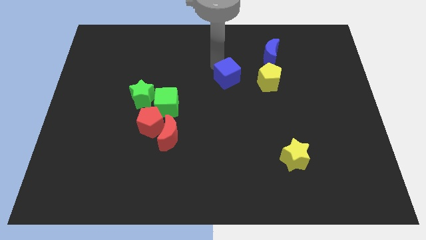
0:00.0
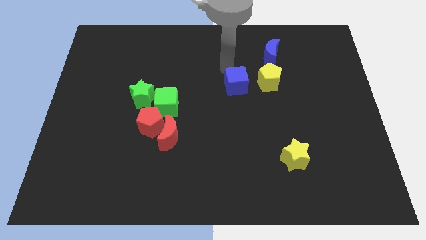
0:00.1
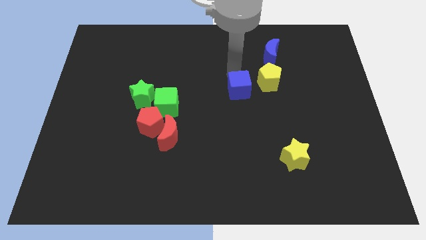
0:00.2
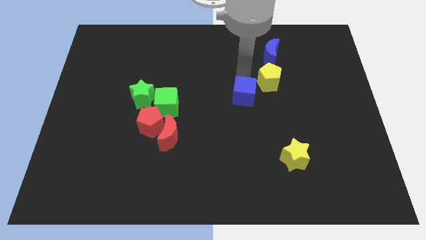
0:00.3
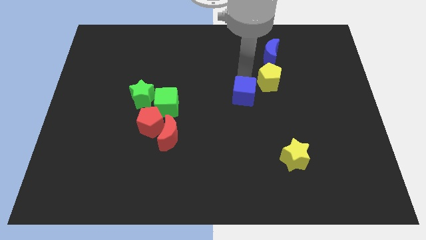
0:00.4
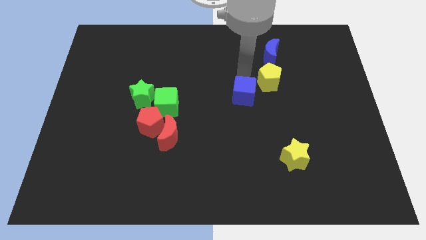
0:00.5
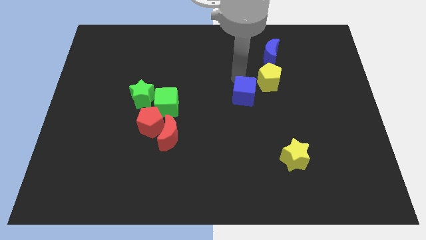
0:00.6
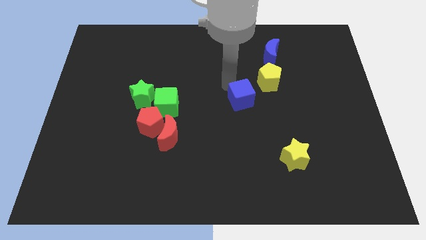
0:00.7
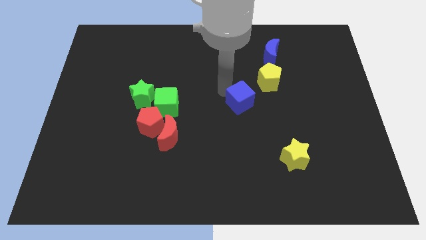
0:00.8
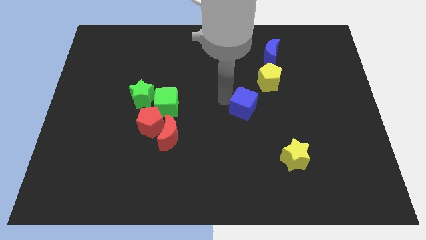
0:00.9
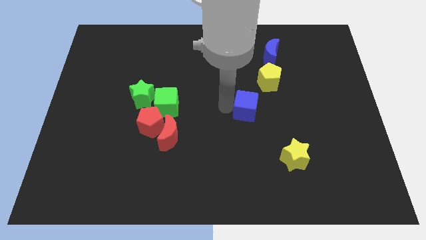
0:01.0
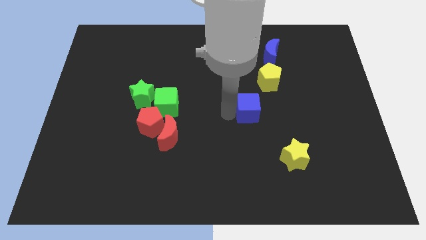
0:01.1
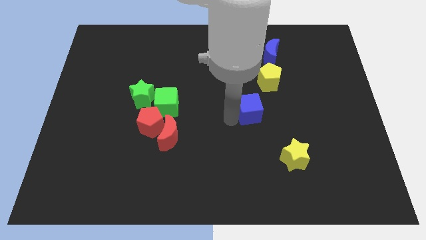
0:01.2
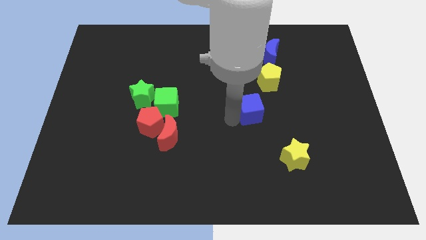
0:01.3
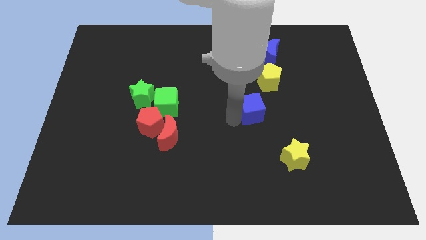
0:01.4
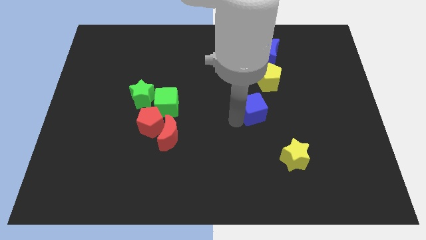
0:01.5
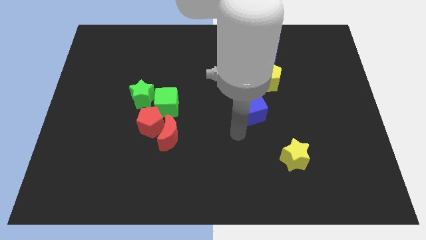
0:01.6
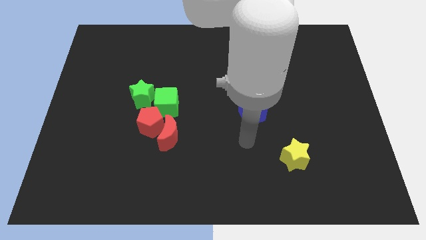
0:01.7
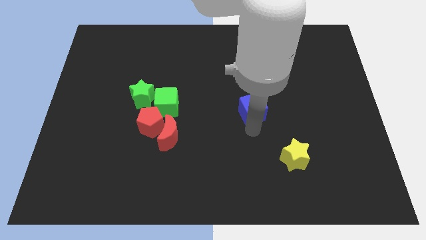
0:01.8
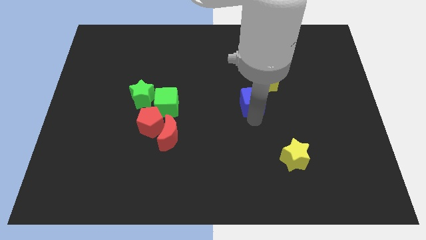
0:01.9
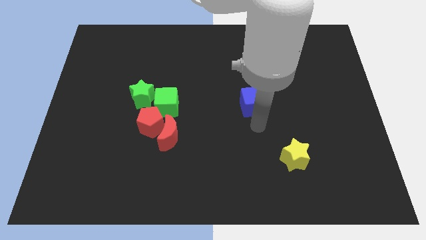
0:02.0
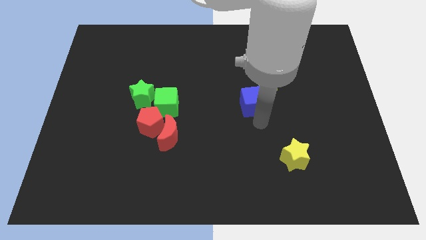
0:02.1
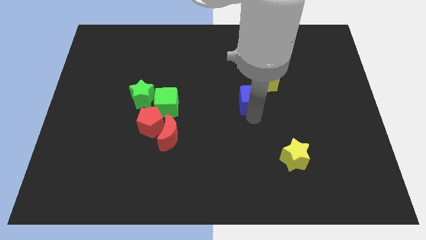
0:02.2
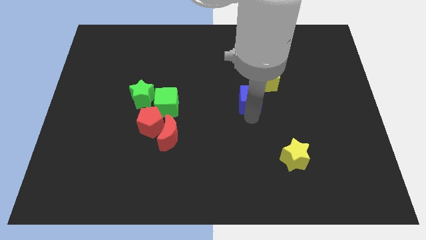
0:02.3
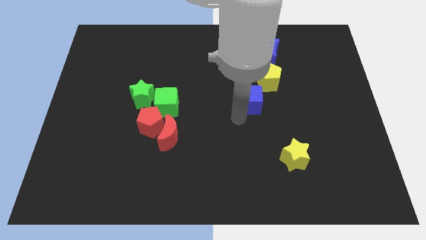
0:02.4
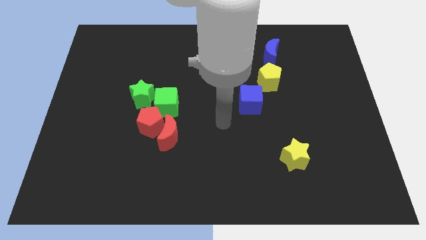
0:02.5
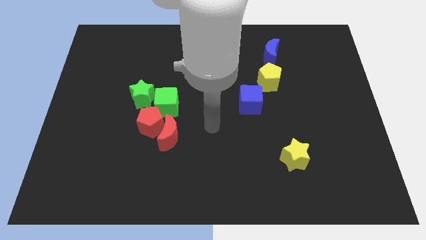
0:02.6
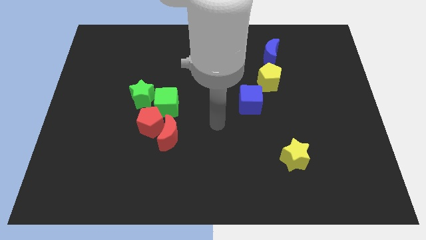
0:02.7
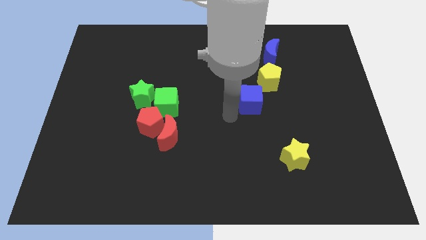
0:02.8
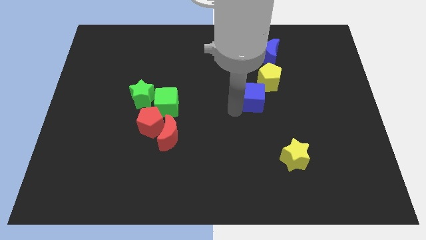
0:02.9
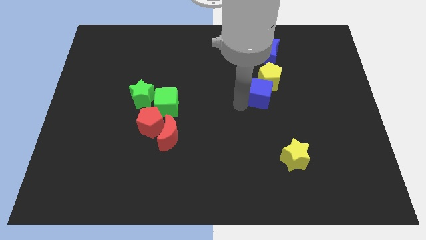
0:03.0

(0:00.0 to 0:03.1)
move blue cube into yellow pentagon

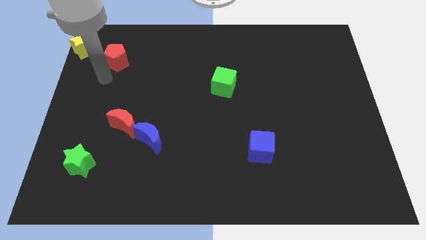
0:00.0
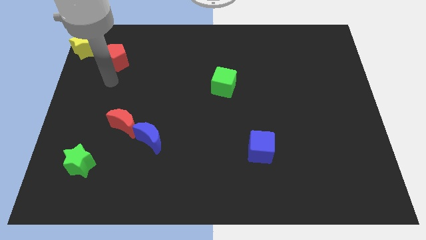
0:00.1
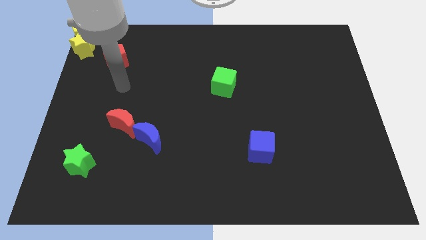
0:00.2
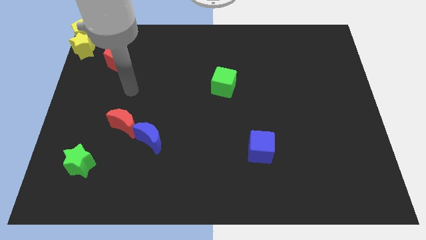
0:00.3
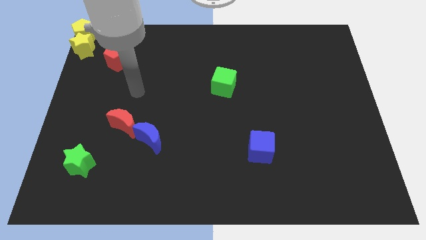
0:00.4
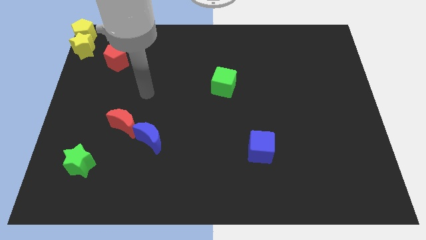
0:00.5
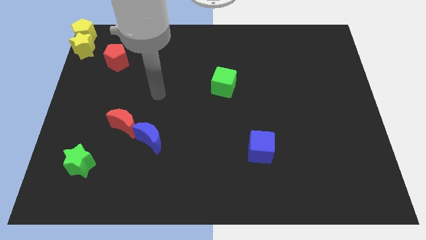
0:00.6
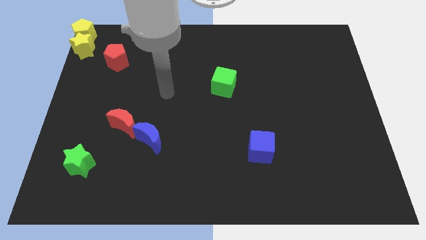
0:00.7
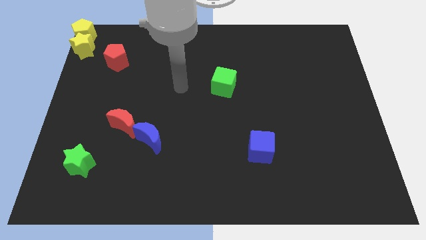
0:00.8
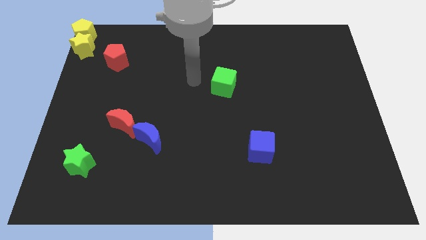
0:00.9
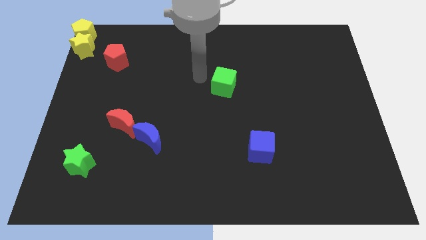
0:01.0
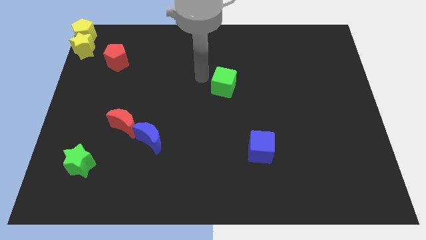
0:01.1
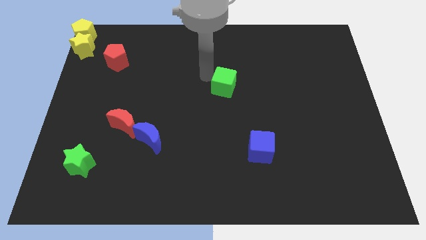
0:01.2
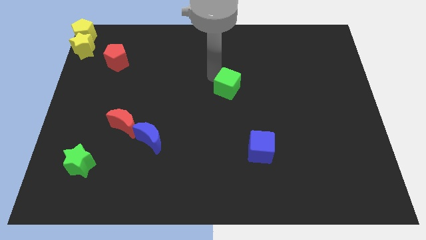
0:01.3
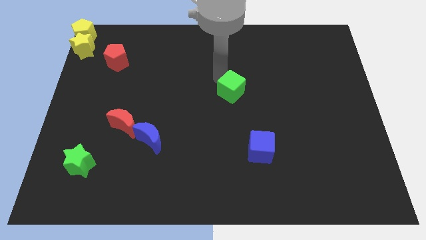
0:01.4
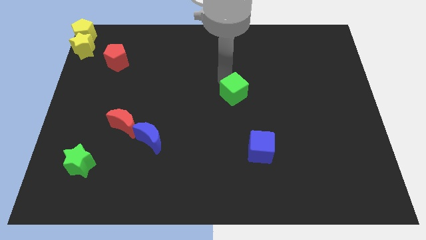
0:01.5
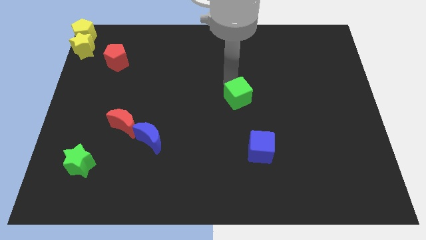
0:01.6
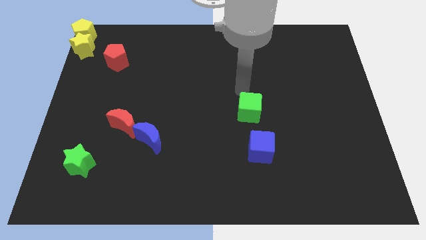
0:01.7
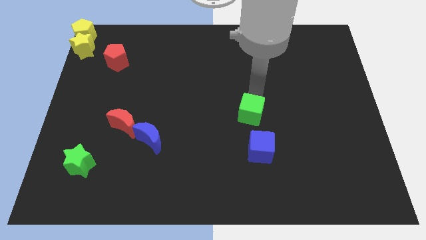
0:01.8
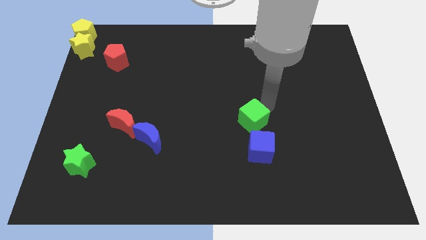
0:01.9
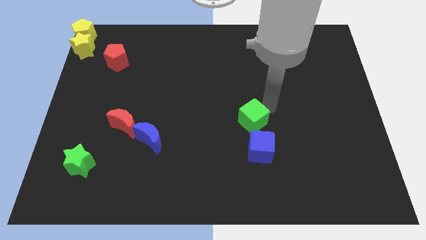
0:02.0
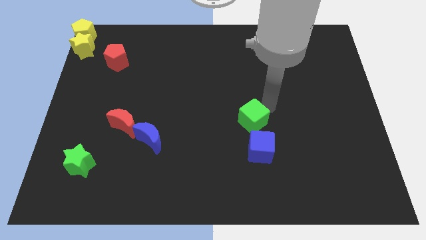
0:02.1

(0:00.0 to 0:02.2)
put the green cube above the blue cube

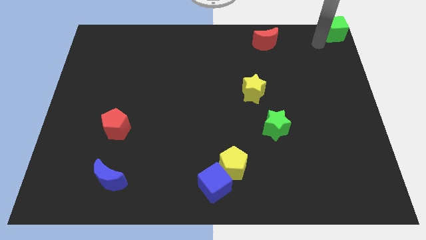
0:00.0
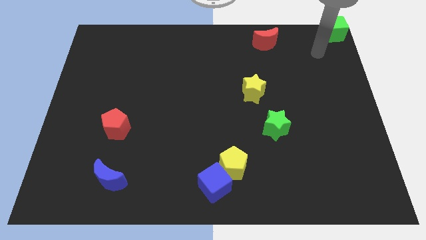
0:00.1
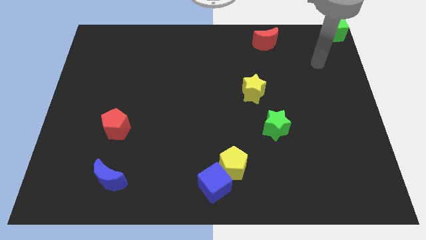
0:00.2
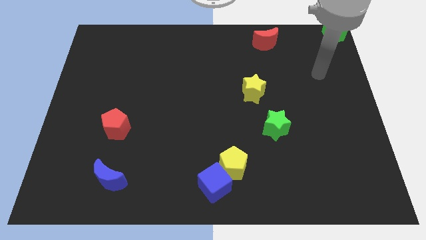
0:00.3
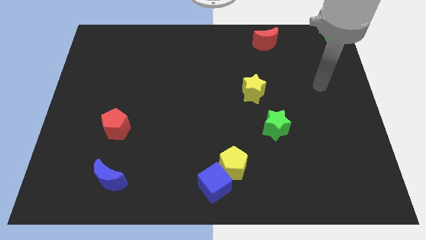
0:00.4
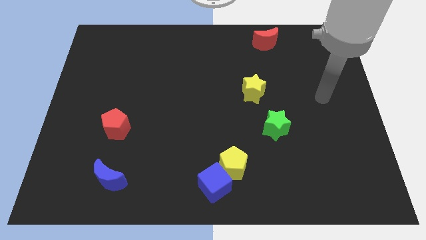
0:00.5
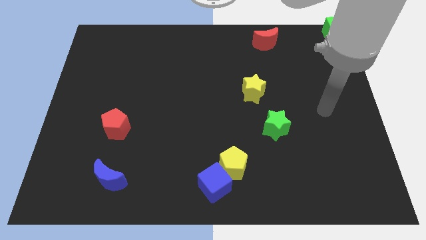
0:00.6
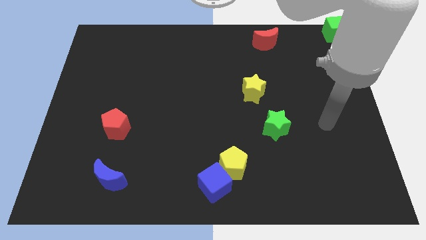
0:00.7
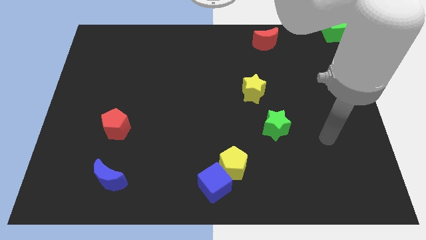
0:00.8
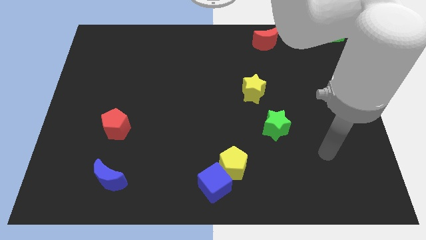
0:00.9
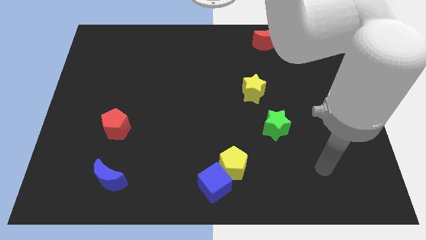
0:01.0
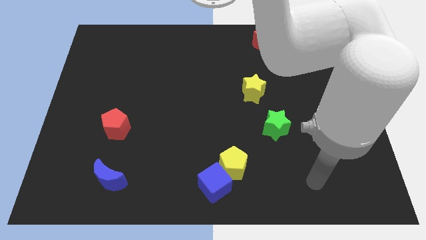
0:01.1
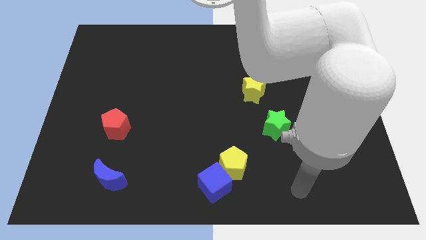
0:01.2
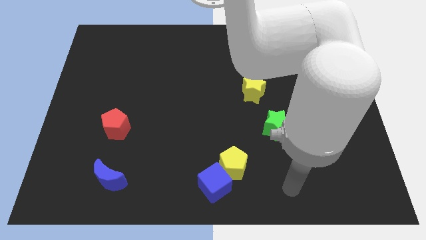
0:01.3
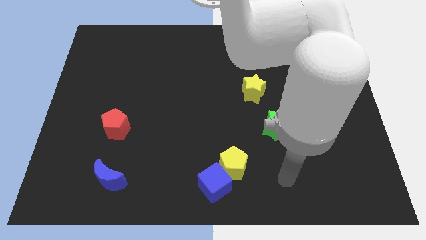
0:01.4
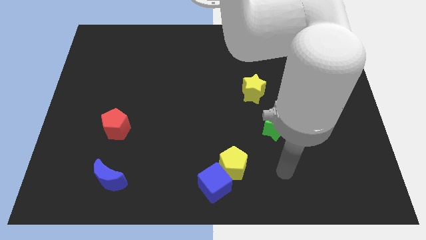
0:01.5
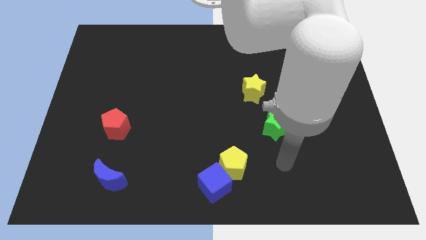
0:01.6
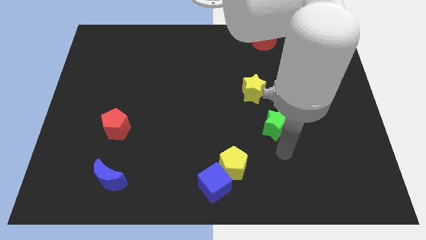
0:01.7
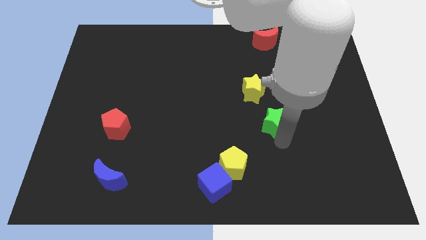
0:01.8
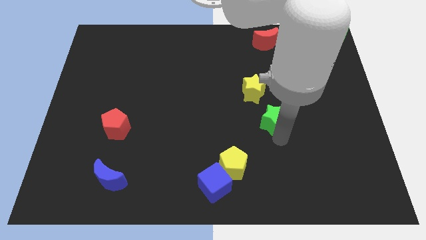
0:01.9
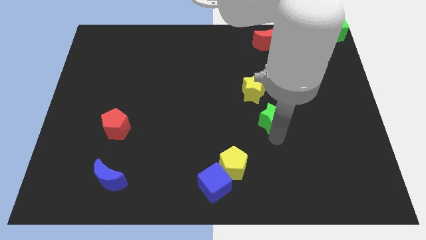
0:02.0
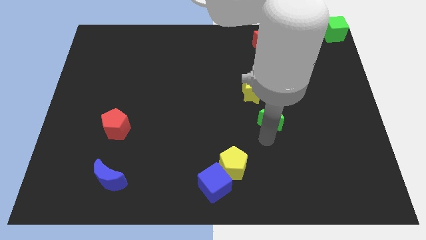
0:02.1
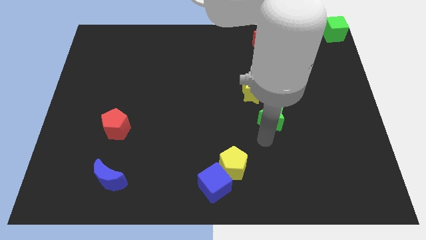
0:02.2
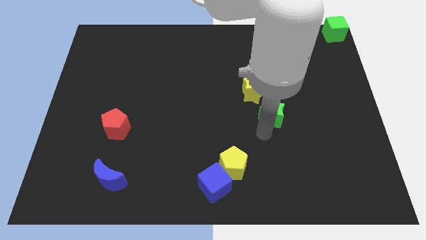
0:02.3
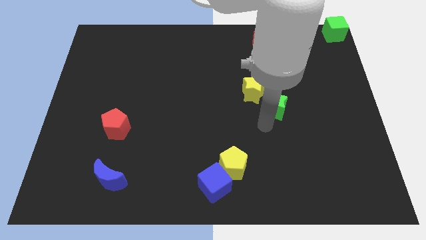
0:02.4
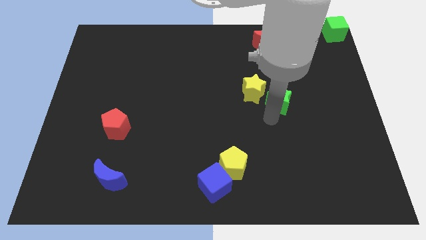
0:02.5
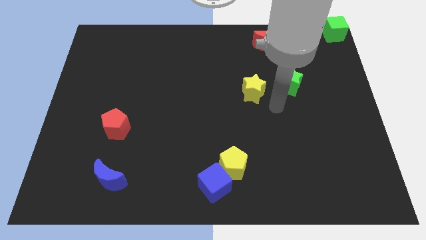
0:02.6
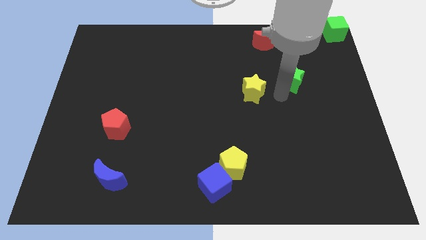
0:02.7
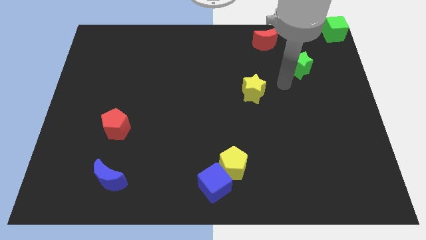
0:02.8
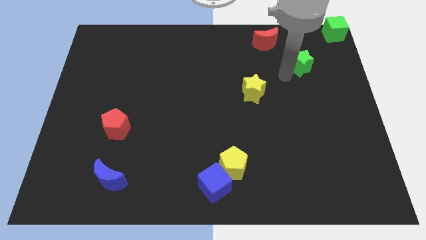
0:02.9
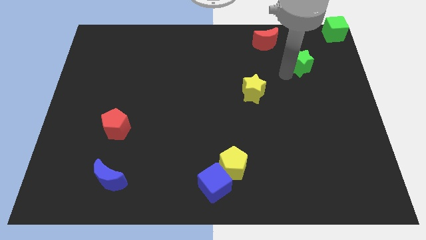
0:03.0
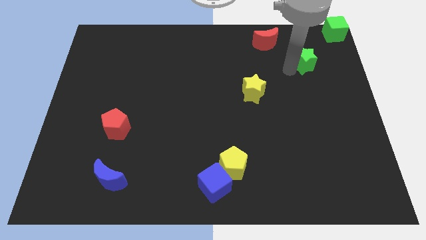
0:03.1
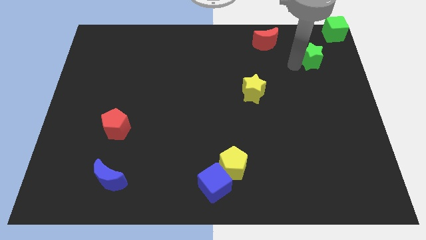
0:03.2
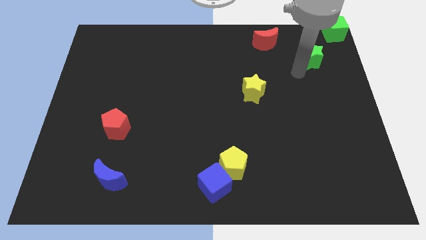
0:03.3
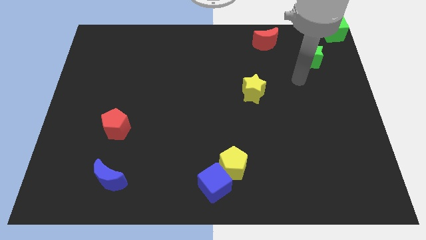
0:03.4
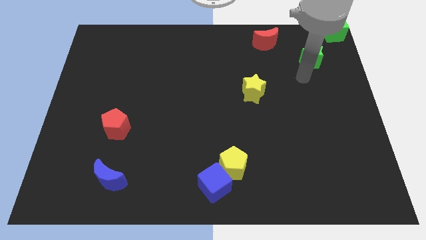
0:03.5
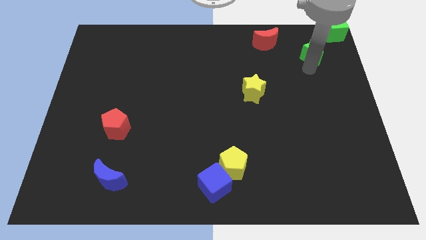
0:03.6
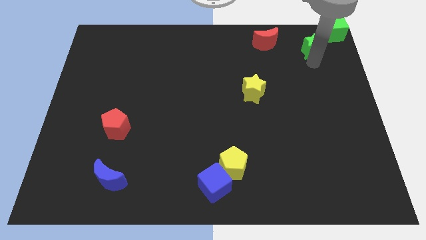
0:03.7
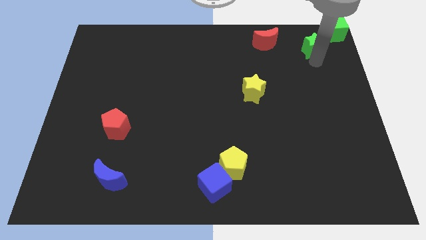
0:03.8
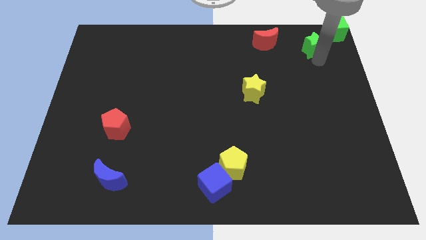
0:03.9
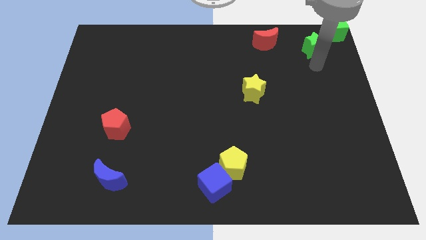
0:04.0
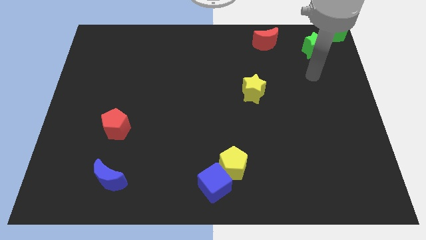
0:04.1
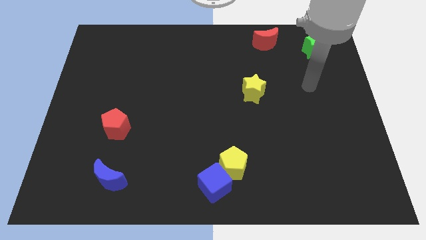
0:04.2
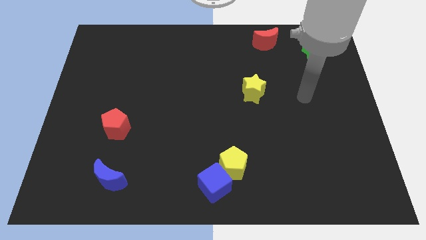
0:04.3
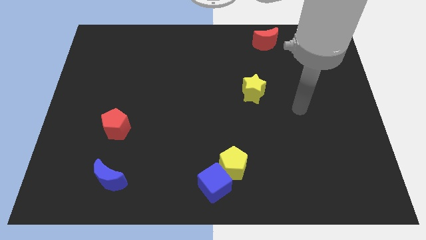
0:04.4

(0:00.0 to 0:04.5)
push green star into green cube
